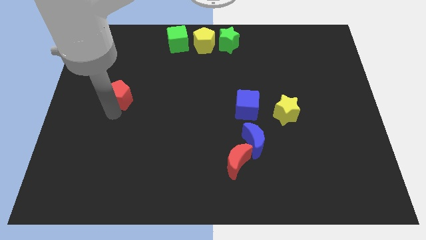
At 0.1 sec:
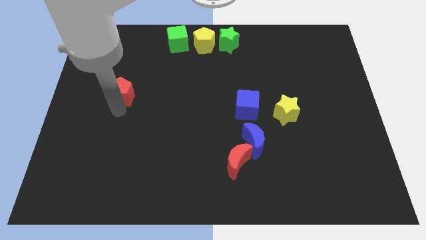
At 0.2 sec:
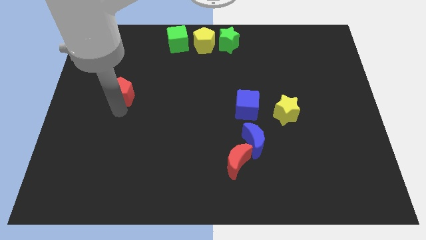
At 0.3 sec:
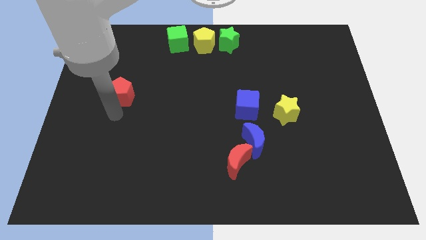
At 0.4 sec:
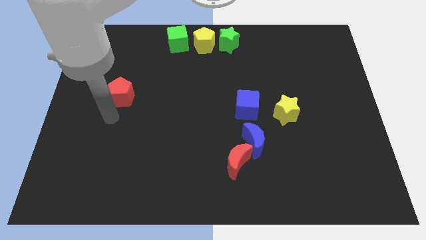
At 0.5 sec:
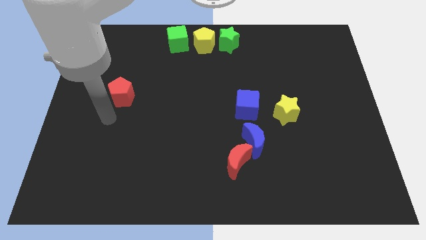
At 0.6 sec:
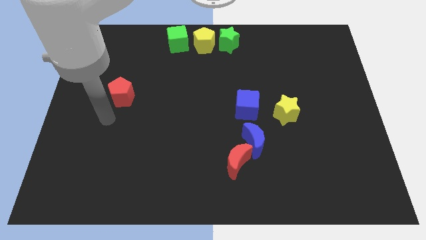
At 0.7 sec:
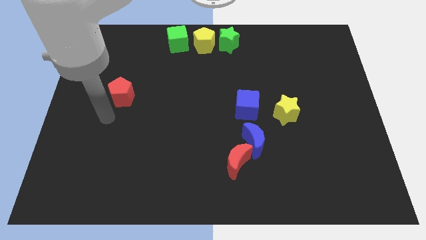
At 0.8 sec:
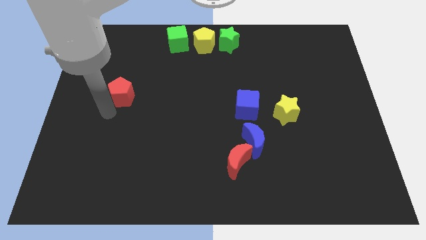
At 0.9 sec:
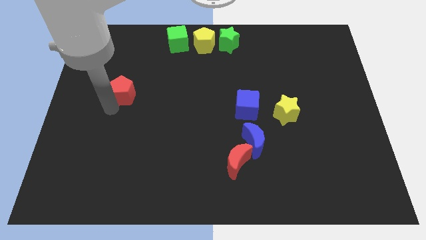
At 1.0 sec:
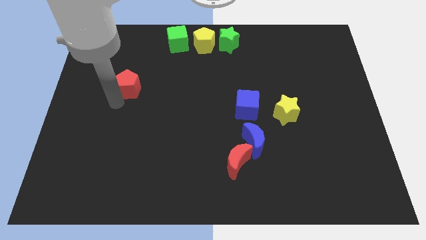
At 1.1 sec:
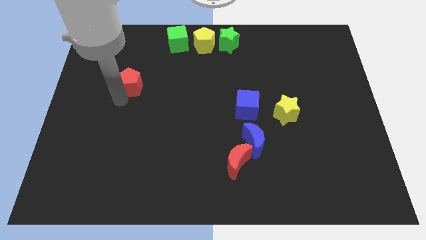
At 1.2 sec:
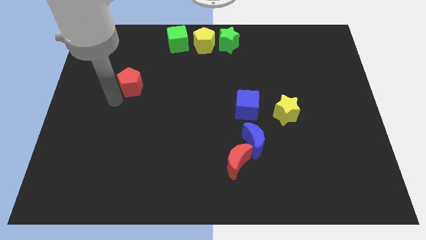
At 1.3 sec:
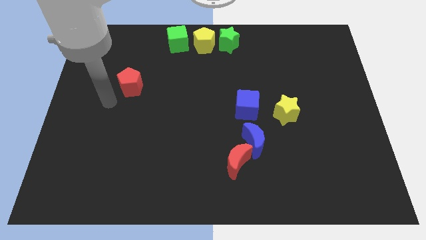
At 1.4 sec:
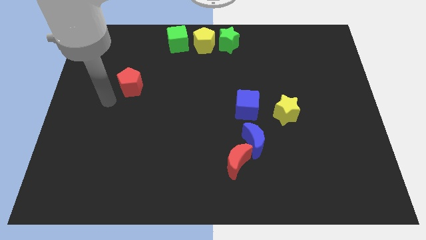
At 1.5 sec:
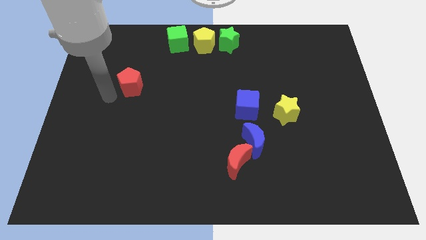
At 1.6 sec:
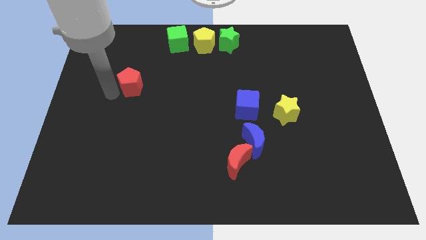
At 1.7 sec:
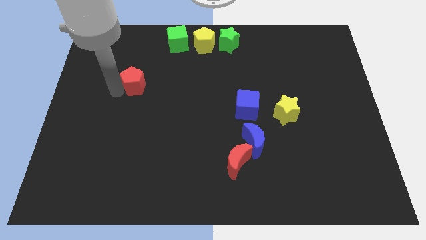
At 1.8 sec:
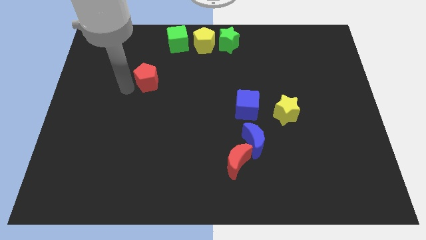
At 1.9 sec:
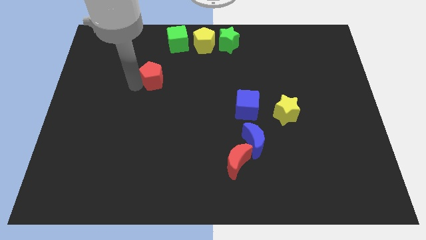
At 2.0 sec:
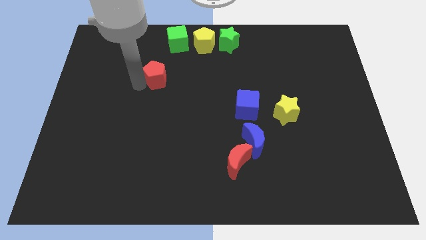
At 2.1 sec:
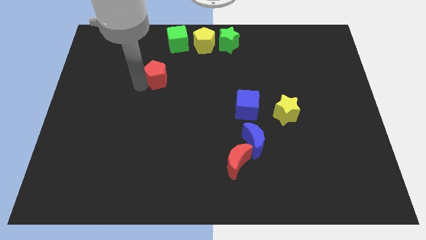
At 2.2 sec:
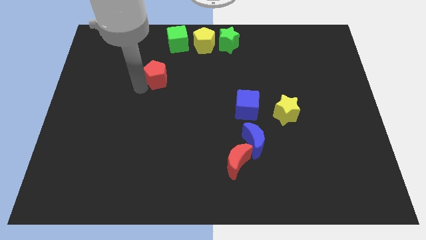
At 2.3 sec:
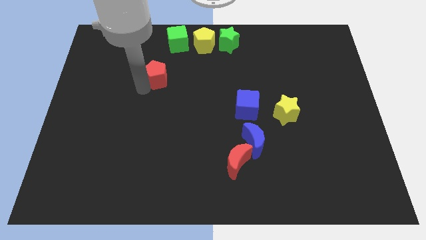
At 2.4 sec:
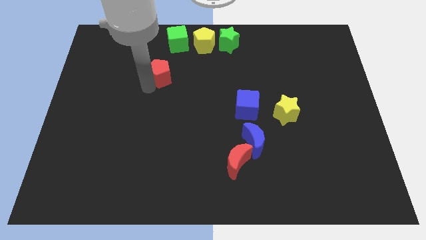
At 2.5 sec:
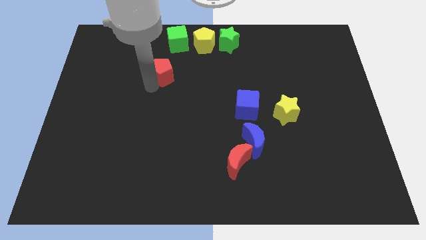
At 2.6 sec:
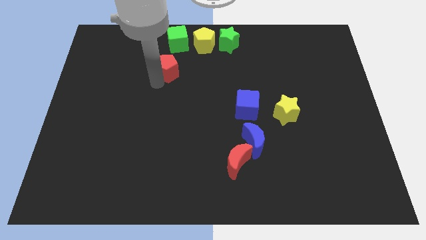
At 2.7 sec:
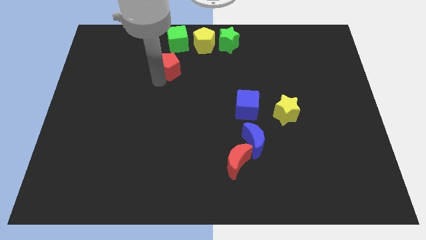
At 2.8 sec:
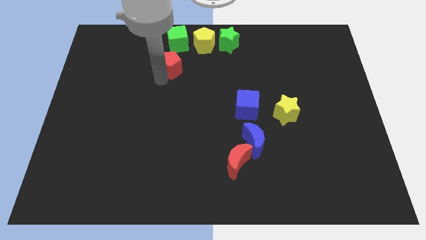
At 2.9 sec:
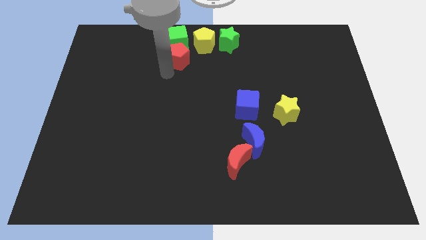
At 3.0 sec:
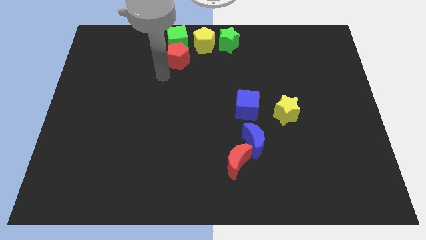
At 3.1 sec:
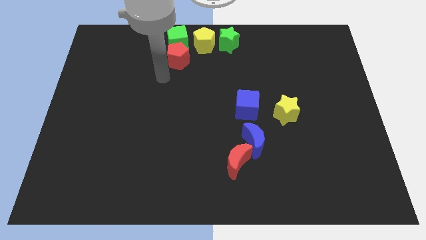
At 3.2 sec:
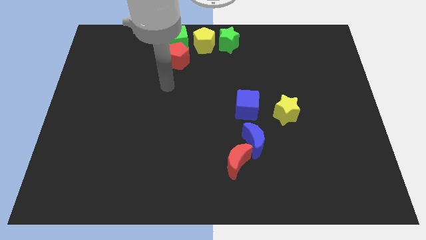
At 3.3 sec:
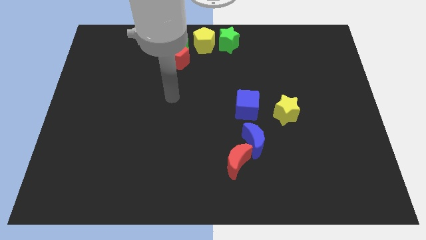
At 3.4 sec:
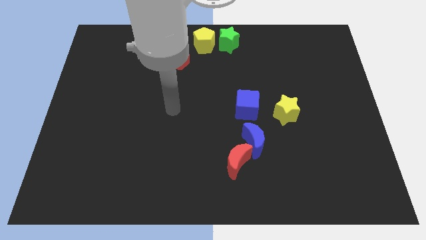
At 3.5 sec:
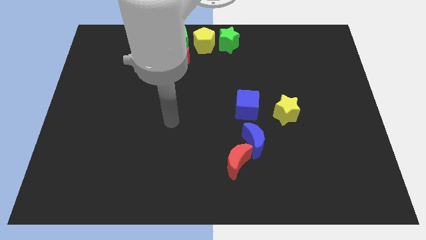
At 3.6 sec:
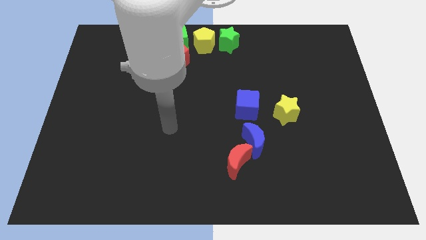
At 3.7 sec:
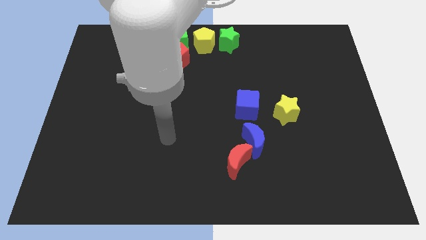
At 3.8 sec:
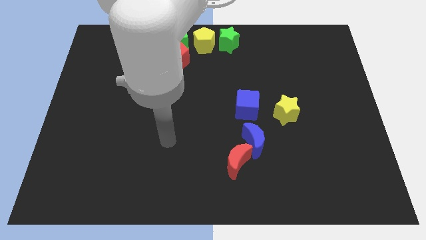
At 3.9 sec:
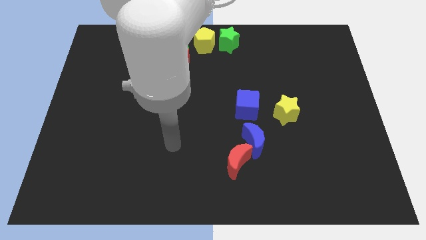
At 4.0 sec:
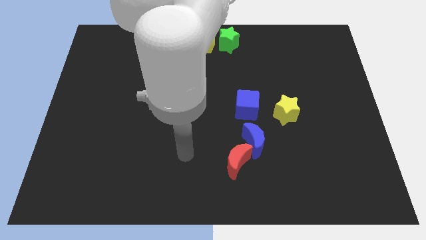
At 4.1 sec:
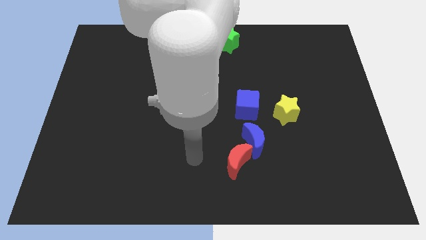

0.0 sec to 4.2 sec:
move the red pentagon into the green cube

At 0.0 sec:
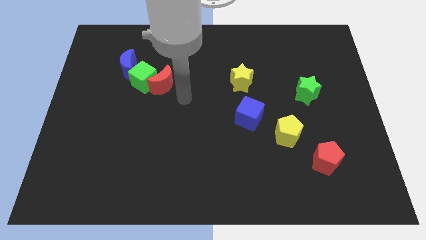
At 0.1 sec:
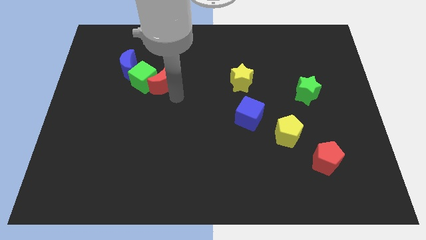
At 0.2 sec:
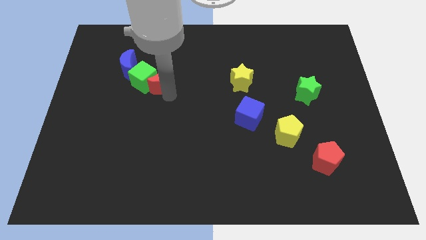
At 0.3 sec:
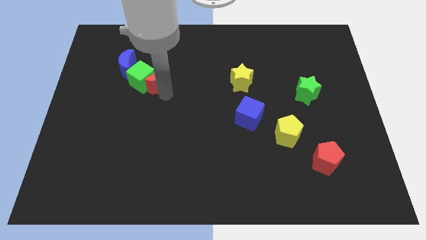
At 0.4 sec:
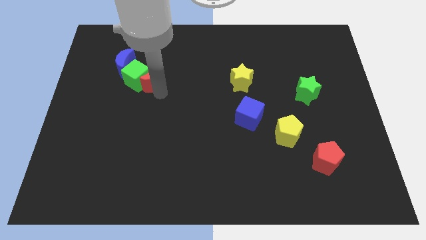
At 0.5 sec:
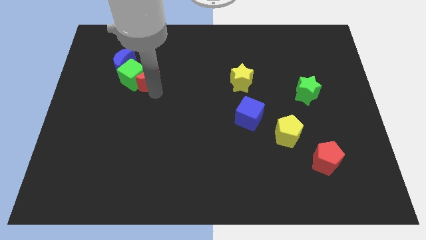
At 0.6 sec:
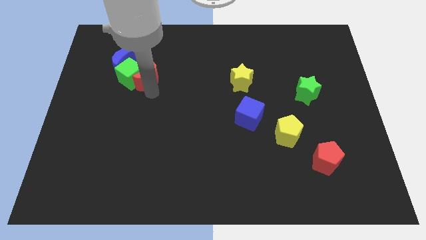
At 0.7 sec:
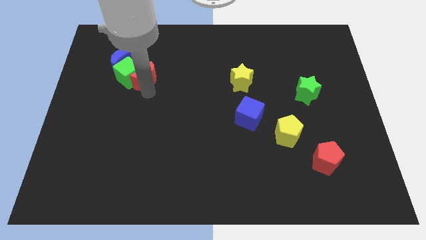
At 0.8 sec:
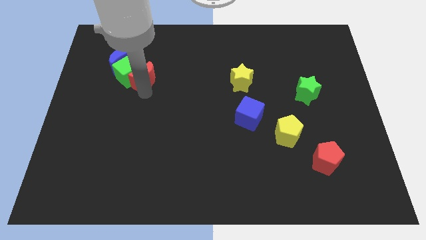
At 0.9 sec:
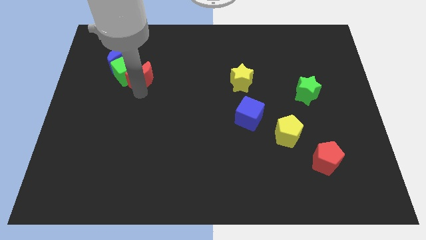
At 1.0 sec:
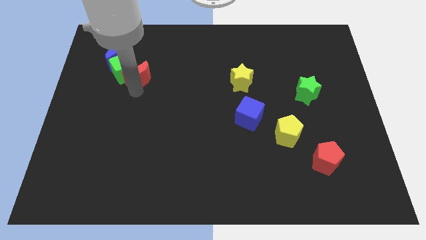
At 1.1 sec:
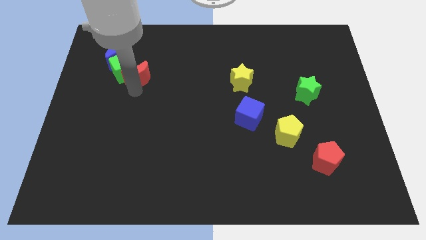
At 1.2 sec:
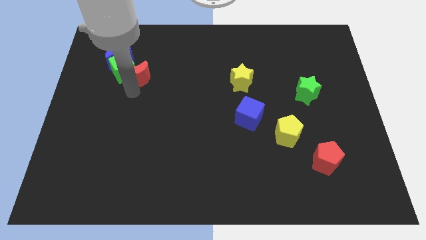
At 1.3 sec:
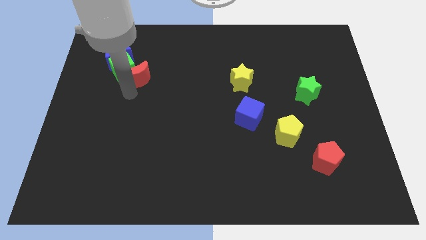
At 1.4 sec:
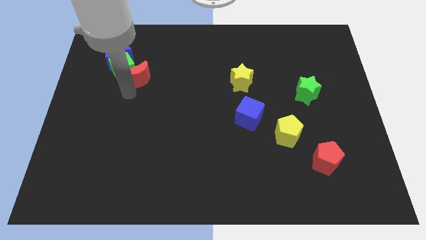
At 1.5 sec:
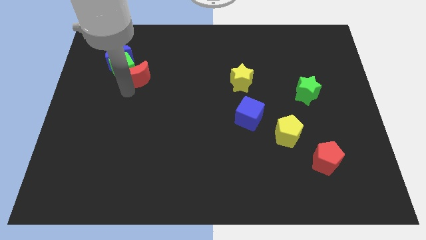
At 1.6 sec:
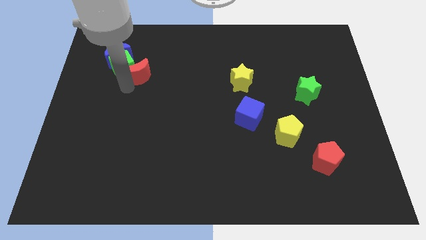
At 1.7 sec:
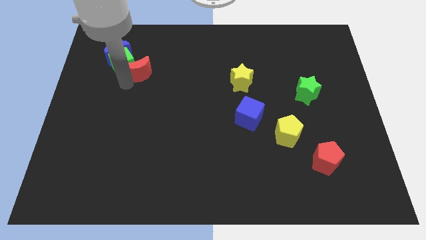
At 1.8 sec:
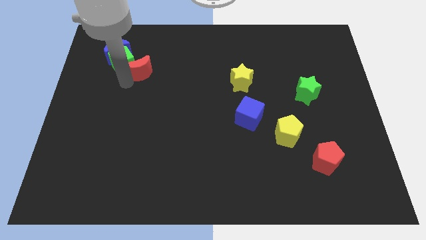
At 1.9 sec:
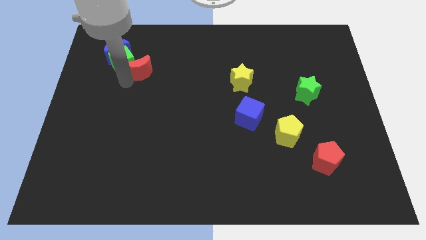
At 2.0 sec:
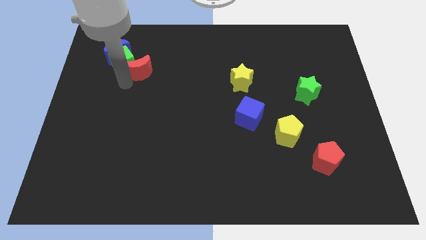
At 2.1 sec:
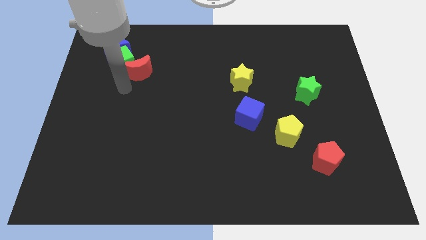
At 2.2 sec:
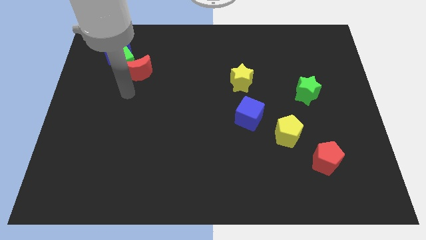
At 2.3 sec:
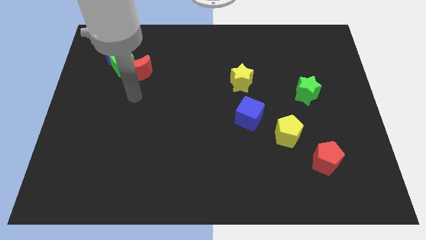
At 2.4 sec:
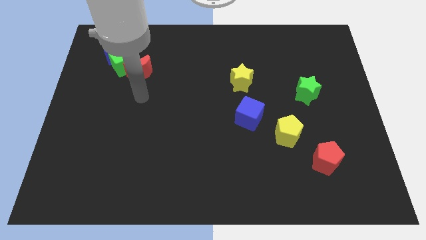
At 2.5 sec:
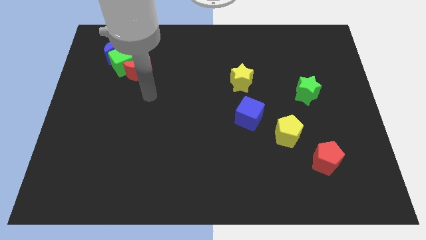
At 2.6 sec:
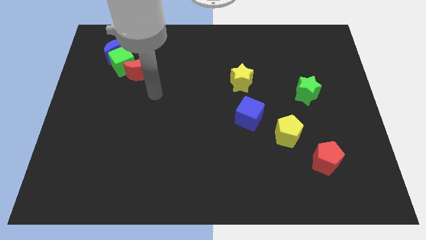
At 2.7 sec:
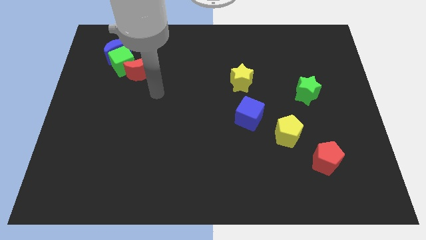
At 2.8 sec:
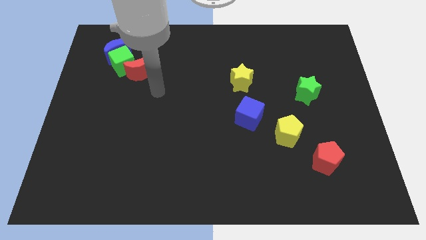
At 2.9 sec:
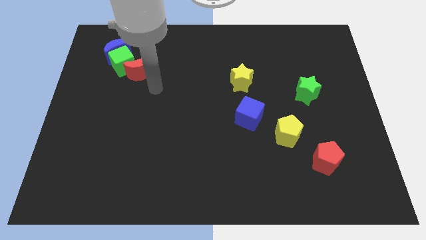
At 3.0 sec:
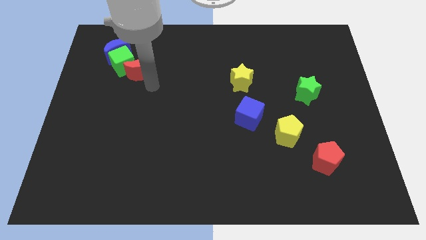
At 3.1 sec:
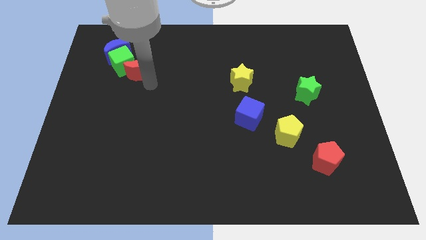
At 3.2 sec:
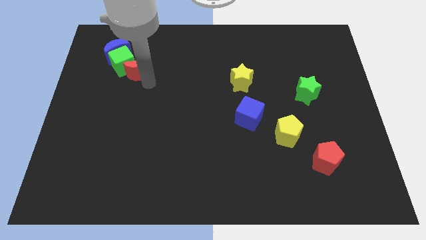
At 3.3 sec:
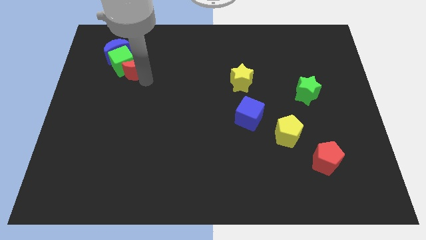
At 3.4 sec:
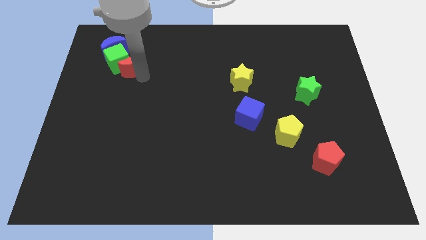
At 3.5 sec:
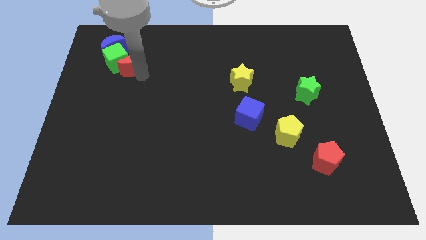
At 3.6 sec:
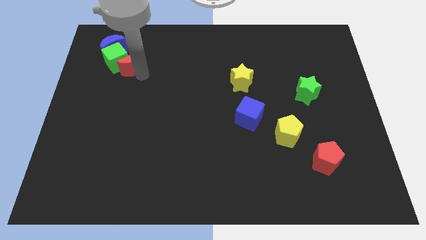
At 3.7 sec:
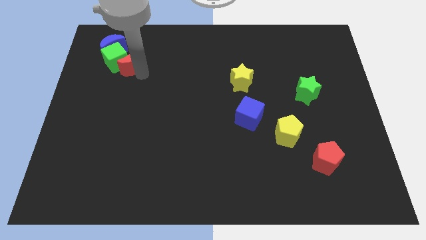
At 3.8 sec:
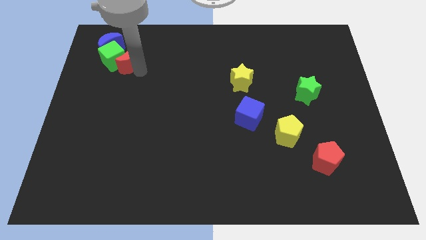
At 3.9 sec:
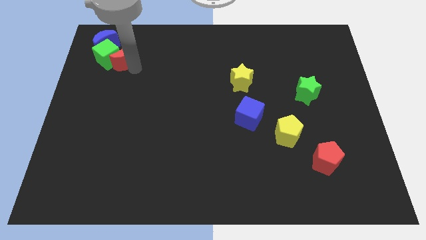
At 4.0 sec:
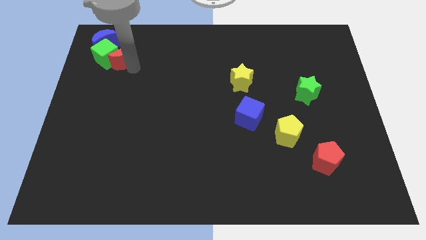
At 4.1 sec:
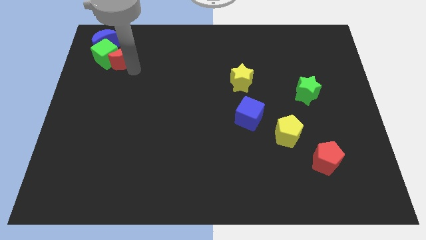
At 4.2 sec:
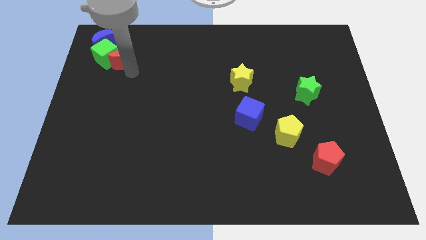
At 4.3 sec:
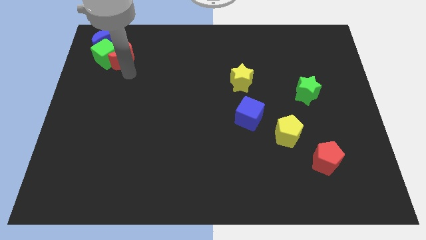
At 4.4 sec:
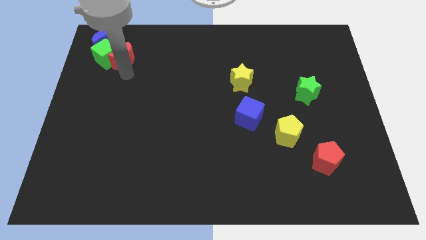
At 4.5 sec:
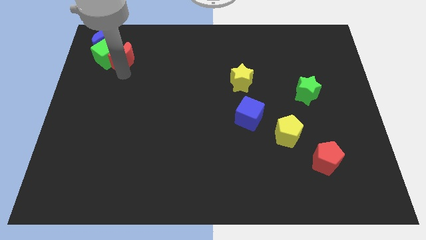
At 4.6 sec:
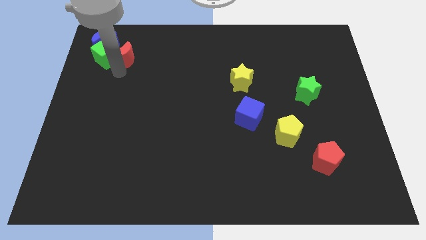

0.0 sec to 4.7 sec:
push the green cube and blue crescent with red moon to the top left of the board
